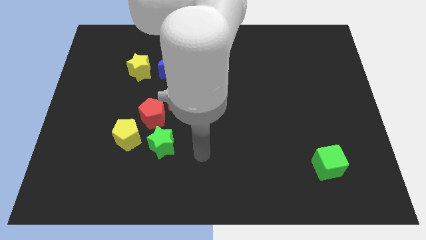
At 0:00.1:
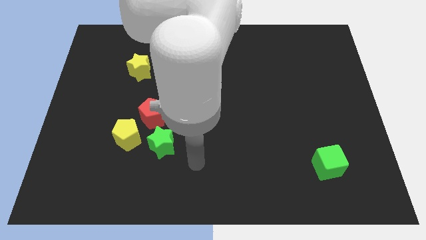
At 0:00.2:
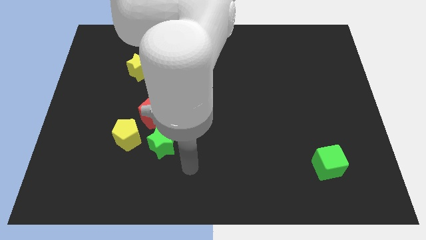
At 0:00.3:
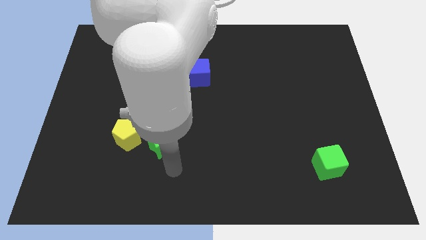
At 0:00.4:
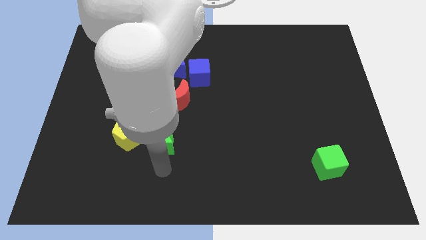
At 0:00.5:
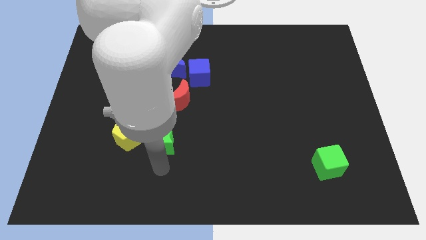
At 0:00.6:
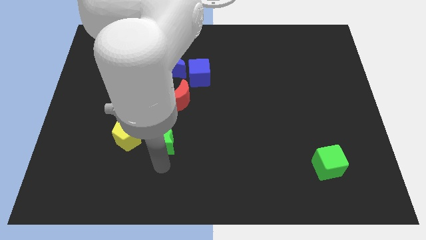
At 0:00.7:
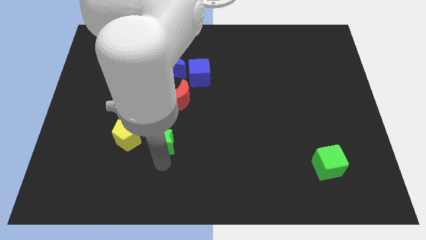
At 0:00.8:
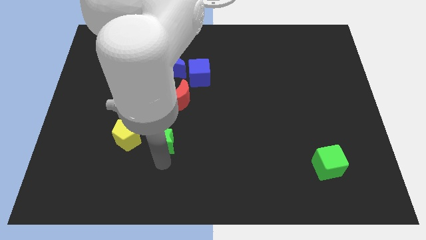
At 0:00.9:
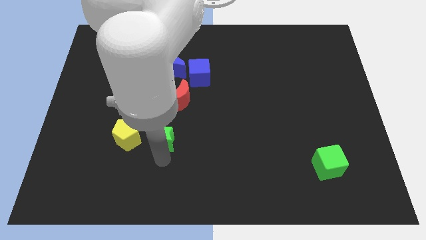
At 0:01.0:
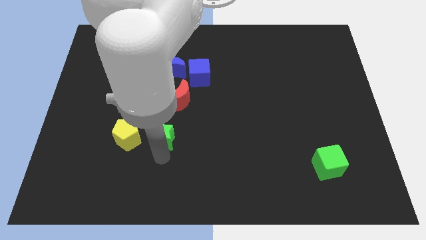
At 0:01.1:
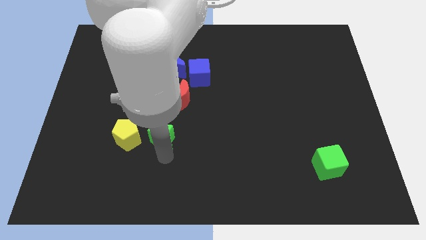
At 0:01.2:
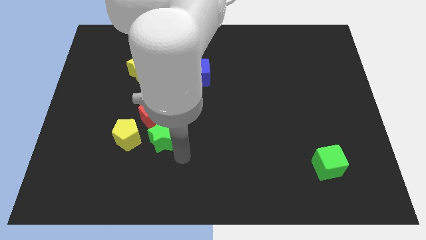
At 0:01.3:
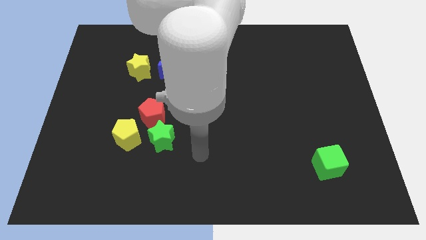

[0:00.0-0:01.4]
push green star towards red pentagon

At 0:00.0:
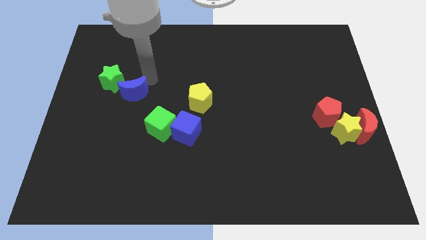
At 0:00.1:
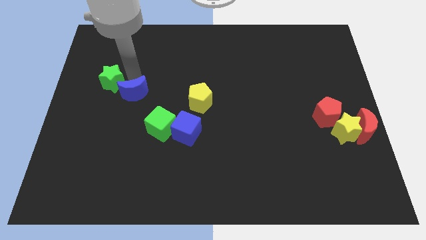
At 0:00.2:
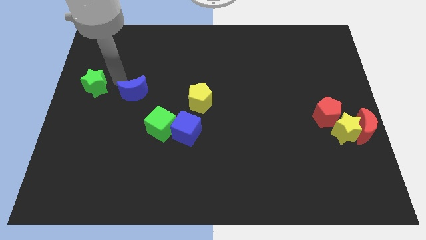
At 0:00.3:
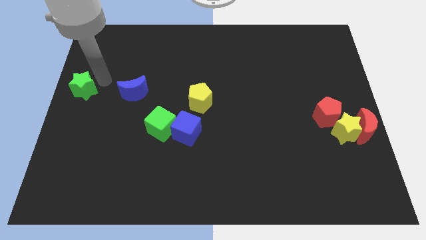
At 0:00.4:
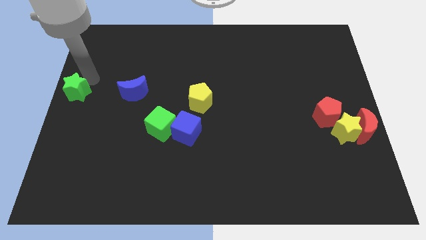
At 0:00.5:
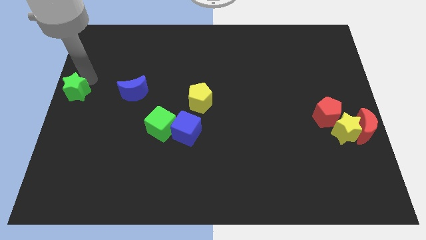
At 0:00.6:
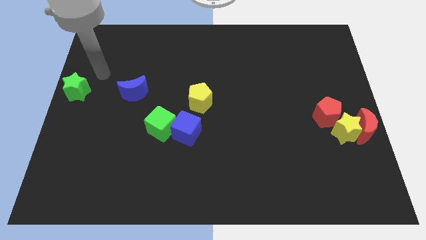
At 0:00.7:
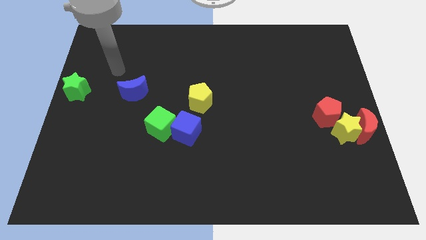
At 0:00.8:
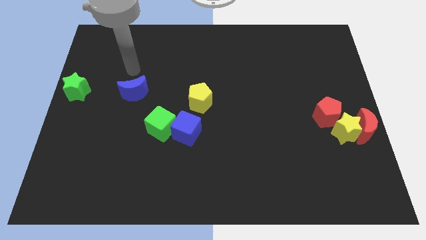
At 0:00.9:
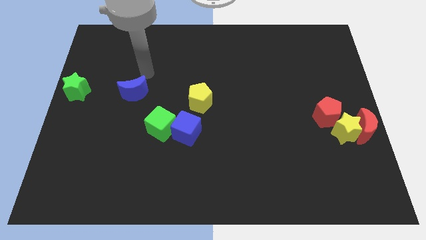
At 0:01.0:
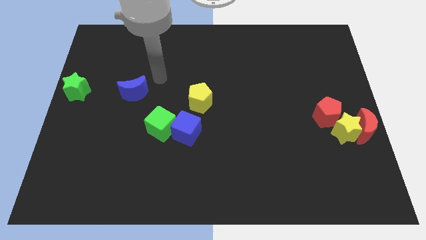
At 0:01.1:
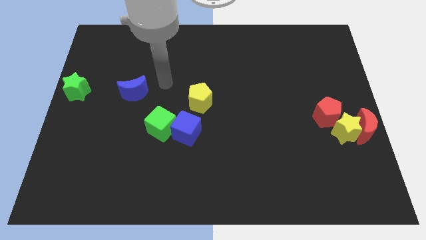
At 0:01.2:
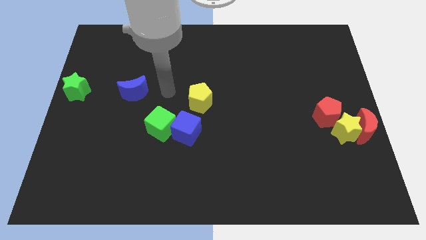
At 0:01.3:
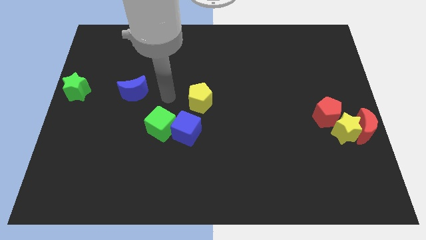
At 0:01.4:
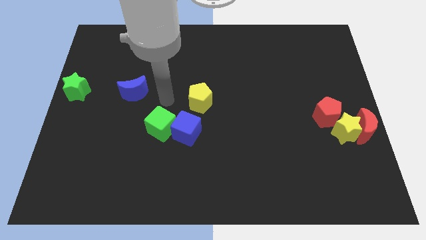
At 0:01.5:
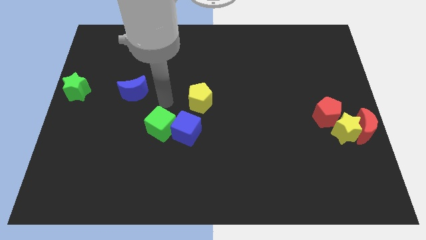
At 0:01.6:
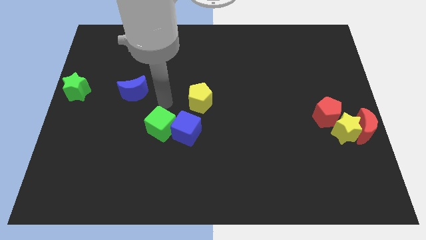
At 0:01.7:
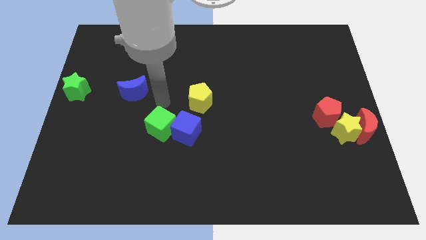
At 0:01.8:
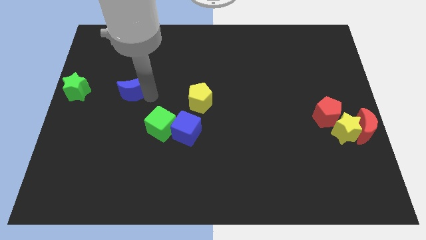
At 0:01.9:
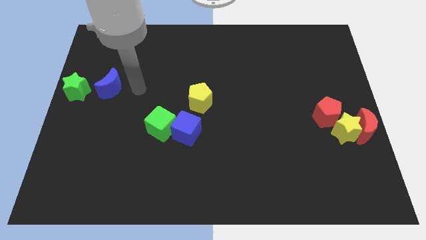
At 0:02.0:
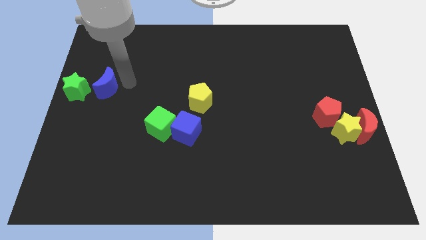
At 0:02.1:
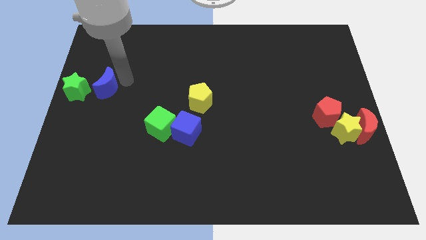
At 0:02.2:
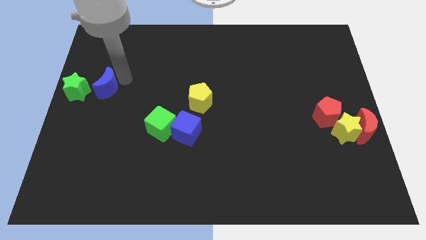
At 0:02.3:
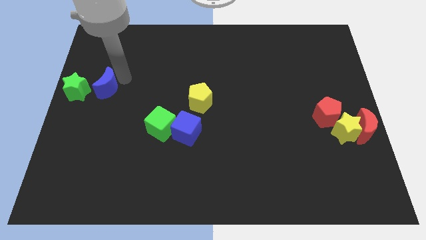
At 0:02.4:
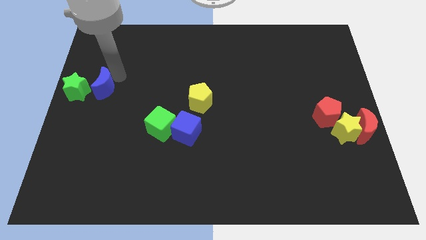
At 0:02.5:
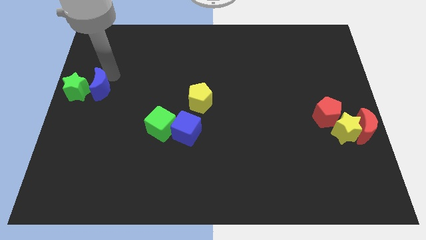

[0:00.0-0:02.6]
push blue crescent beside green star

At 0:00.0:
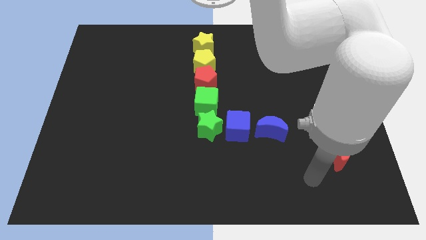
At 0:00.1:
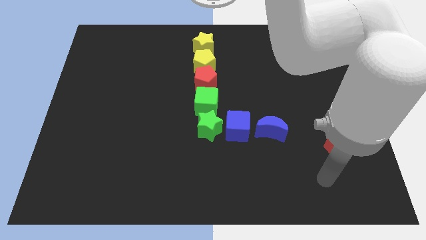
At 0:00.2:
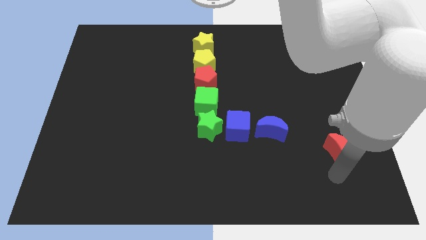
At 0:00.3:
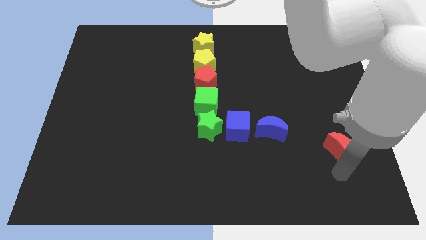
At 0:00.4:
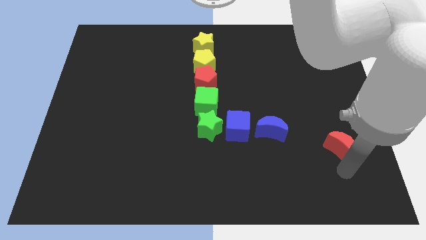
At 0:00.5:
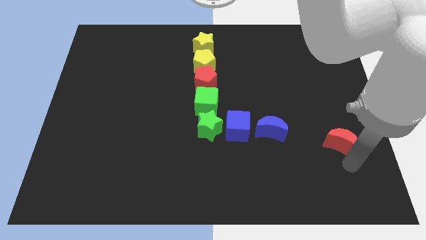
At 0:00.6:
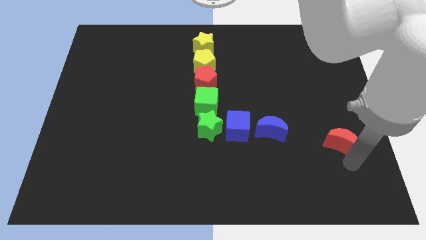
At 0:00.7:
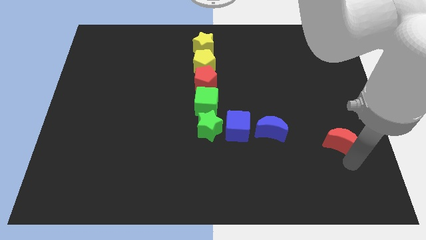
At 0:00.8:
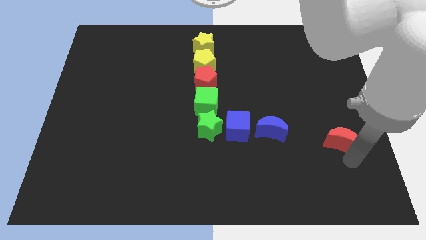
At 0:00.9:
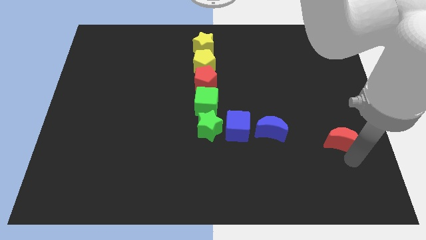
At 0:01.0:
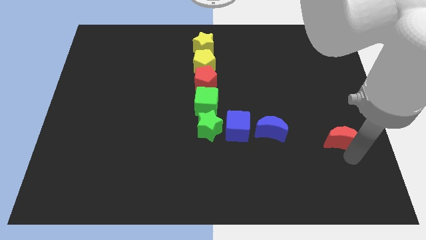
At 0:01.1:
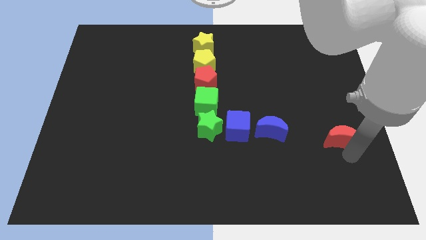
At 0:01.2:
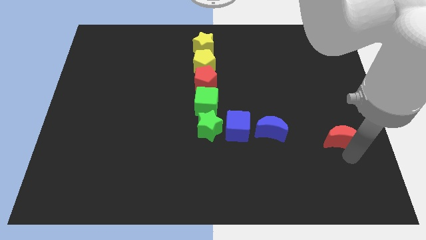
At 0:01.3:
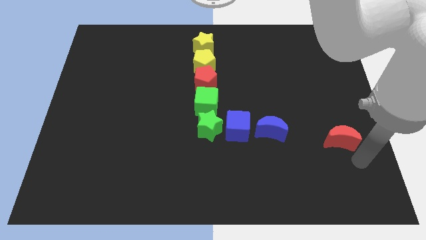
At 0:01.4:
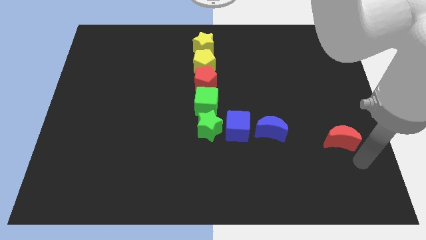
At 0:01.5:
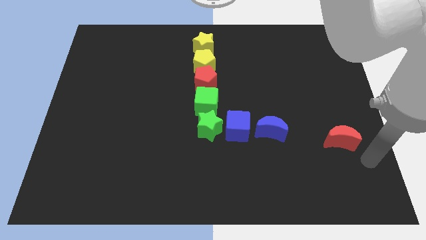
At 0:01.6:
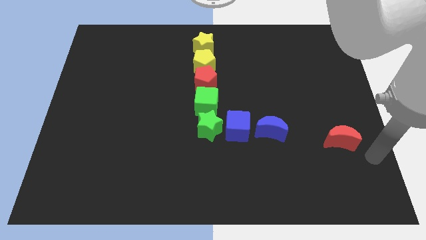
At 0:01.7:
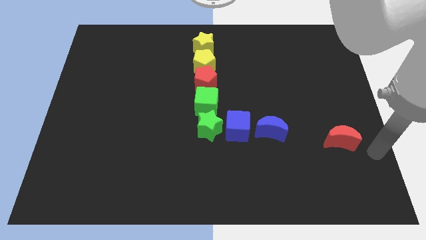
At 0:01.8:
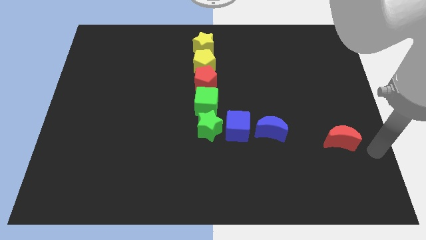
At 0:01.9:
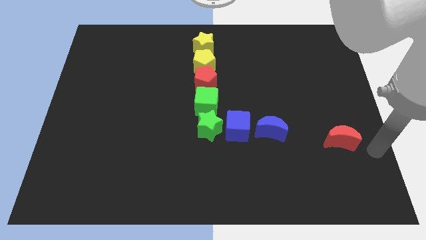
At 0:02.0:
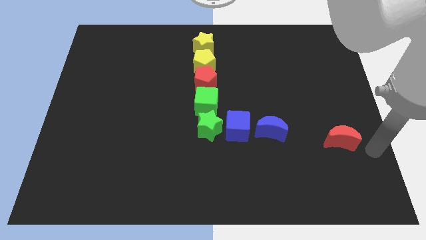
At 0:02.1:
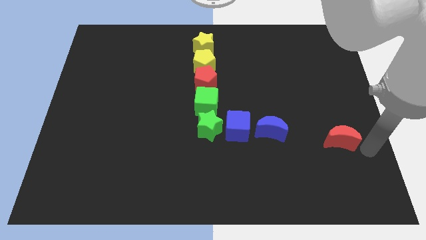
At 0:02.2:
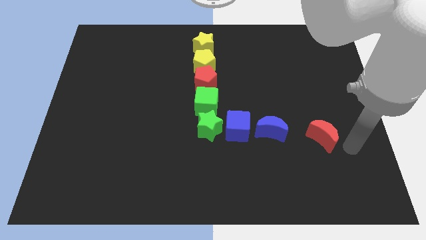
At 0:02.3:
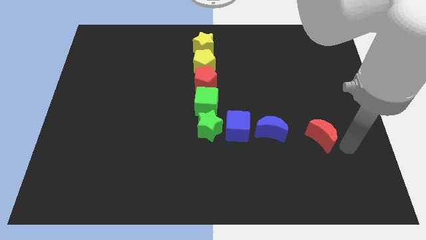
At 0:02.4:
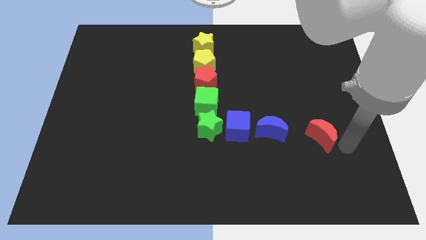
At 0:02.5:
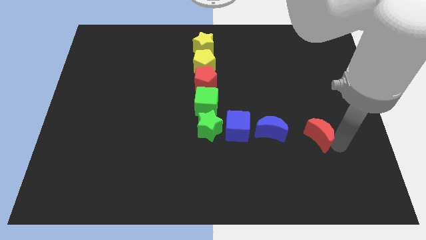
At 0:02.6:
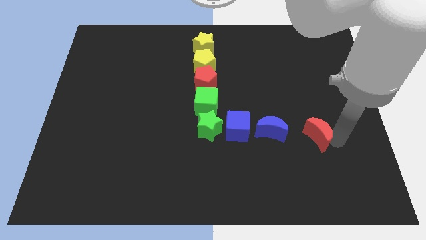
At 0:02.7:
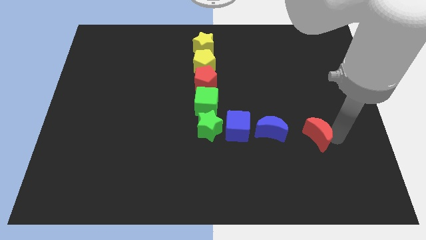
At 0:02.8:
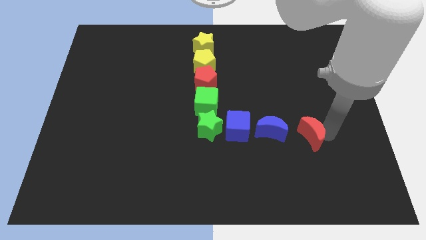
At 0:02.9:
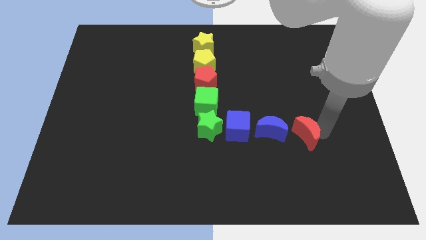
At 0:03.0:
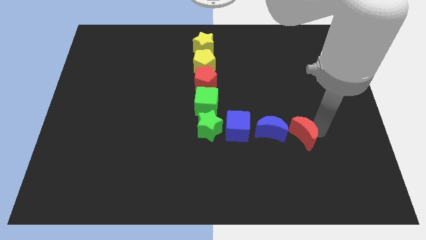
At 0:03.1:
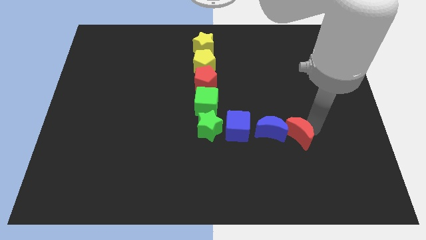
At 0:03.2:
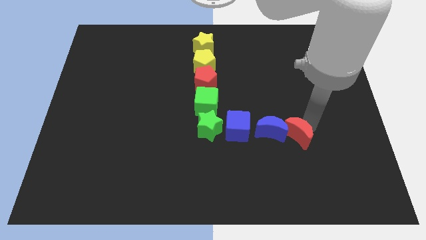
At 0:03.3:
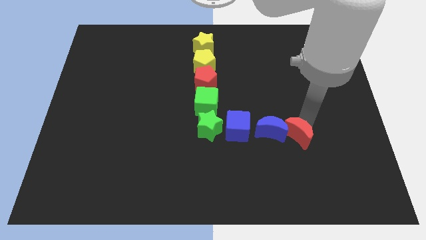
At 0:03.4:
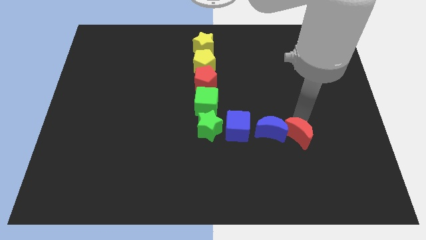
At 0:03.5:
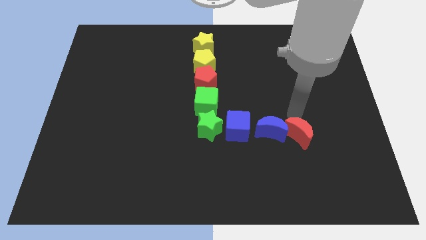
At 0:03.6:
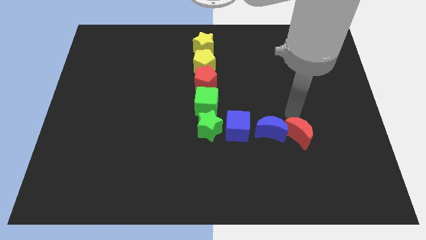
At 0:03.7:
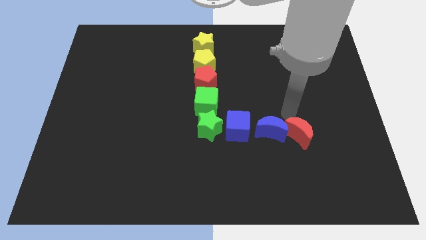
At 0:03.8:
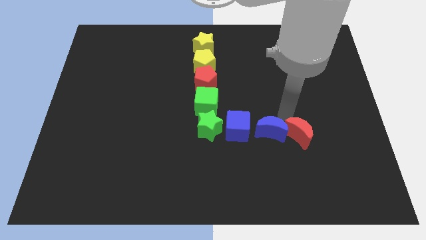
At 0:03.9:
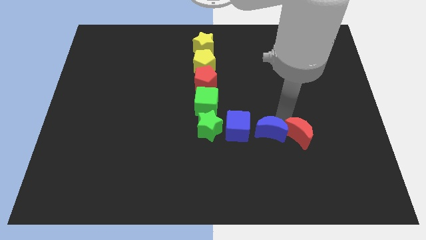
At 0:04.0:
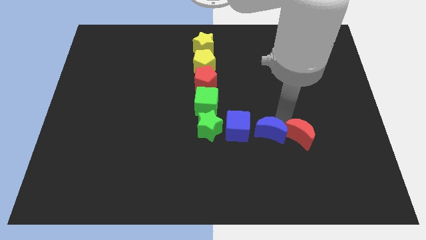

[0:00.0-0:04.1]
slide the red moon into the blue moon

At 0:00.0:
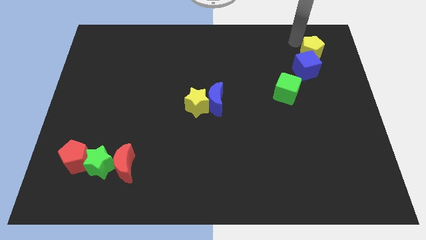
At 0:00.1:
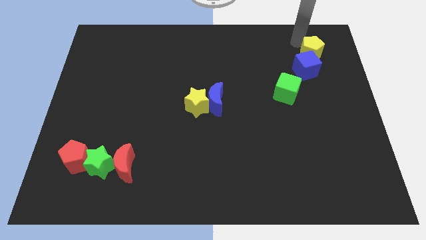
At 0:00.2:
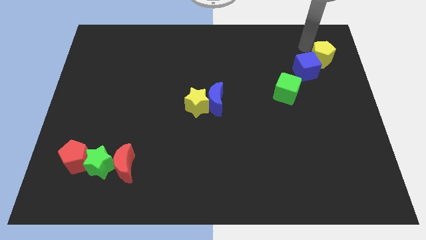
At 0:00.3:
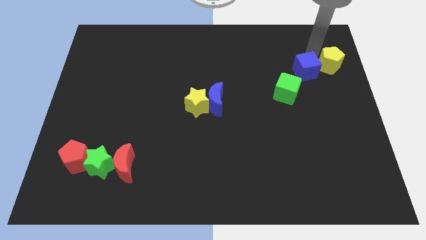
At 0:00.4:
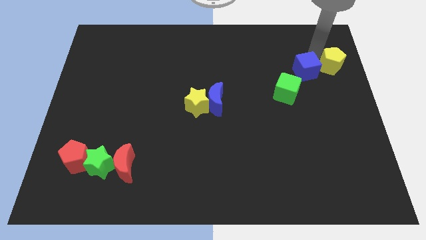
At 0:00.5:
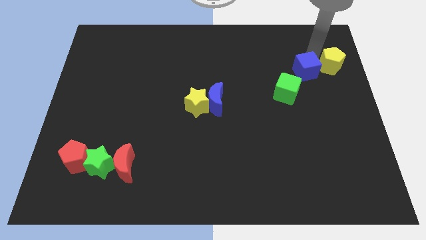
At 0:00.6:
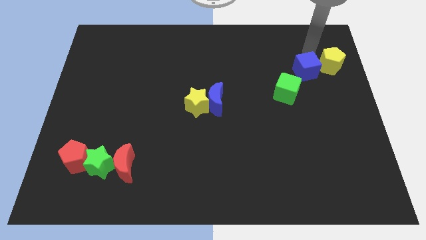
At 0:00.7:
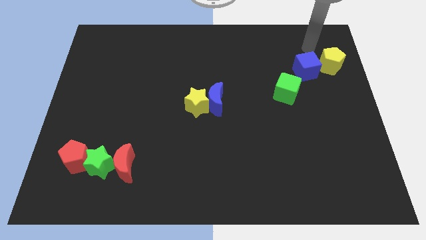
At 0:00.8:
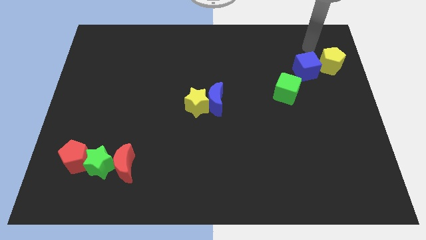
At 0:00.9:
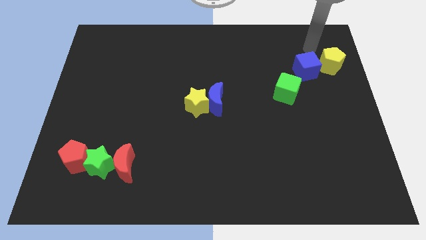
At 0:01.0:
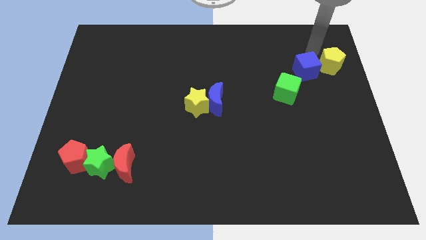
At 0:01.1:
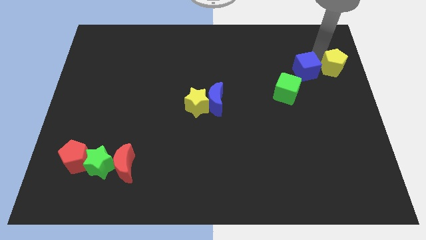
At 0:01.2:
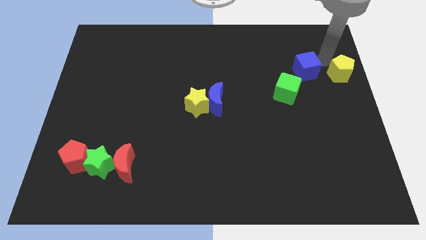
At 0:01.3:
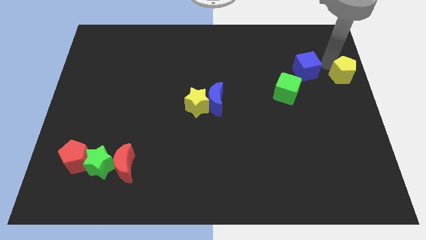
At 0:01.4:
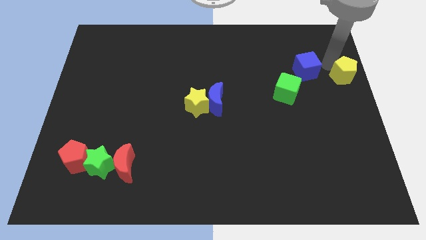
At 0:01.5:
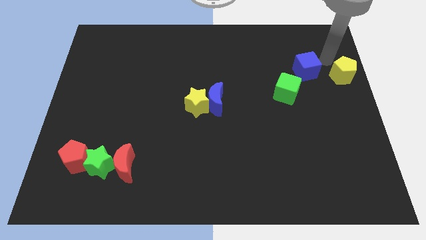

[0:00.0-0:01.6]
separate the yellow pentagon from the blue cube
